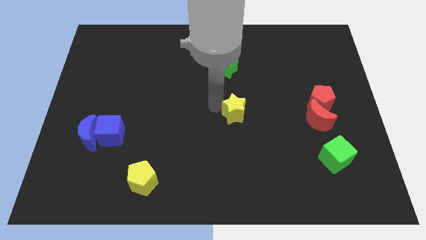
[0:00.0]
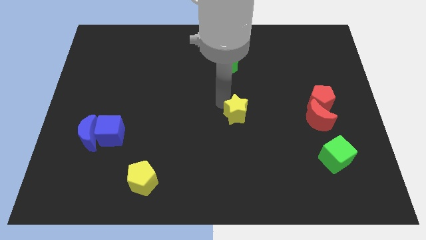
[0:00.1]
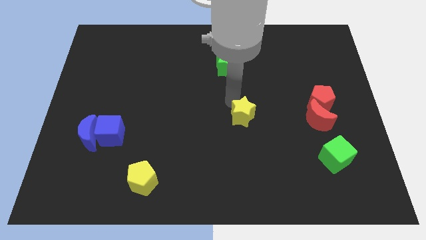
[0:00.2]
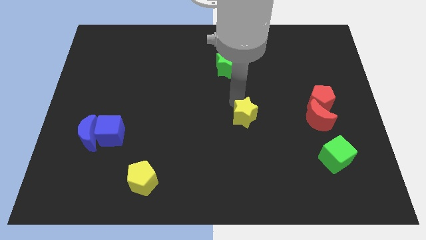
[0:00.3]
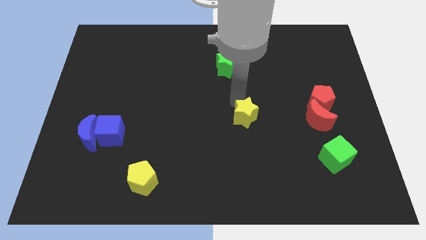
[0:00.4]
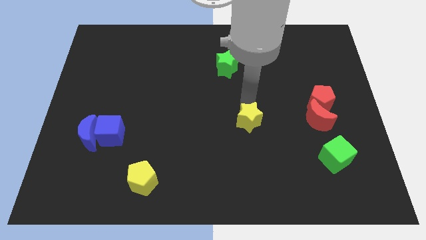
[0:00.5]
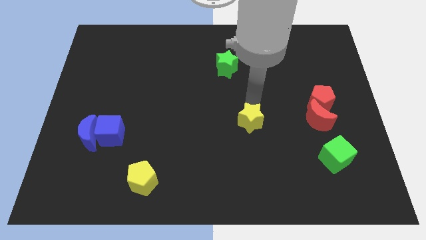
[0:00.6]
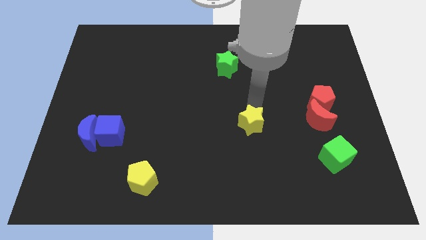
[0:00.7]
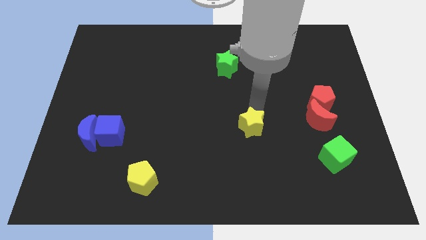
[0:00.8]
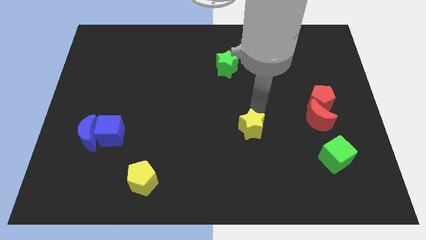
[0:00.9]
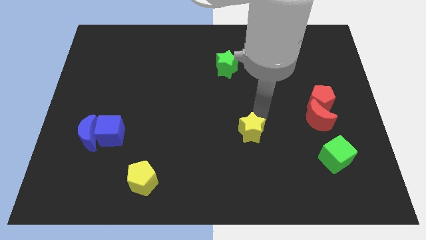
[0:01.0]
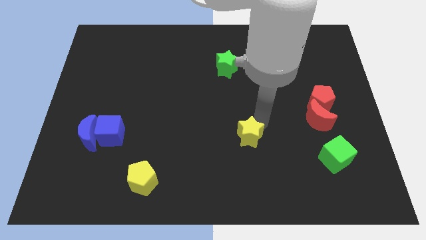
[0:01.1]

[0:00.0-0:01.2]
move the yellow star to the right of blue blocks

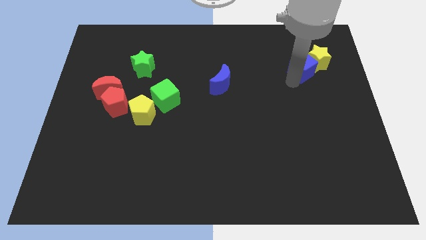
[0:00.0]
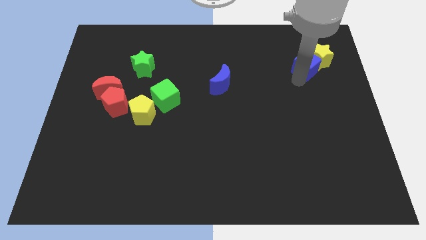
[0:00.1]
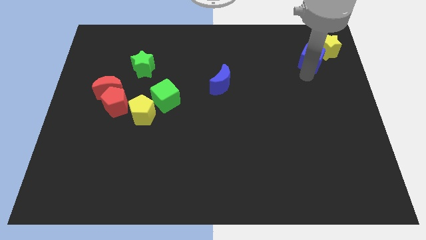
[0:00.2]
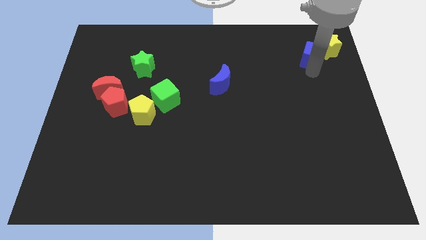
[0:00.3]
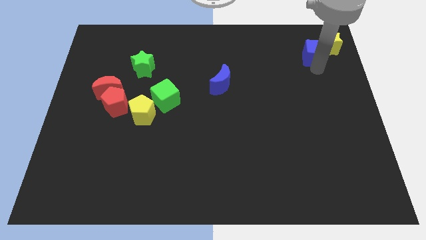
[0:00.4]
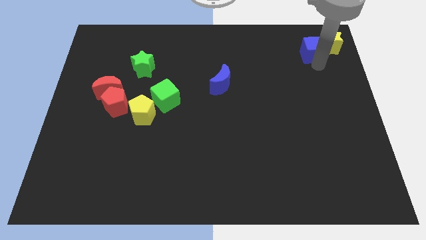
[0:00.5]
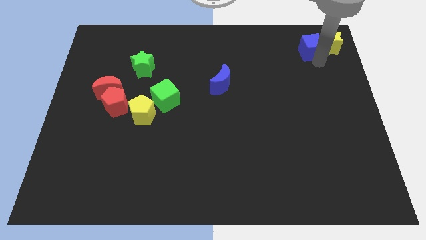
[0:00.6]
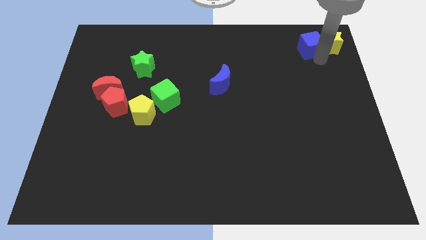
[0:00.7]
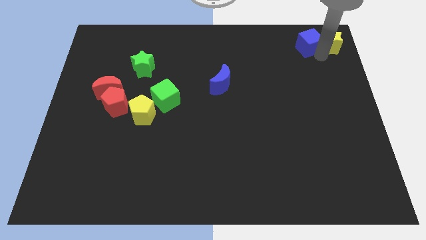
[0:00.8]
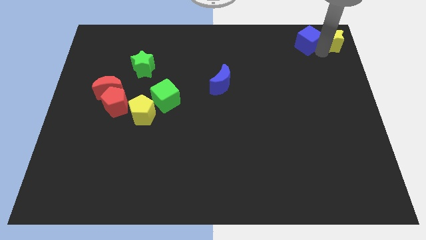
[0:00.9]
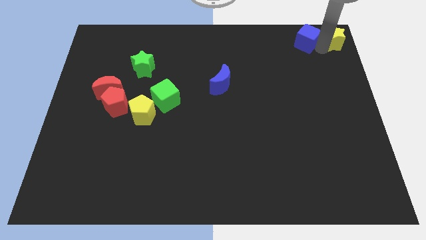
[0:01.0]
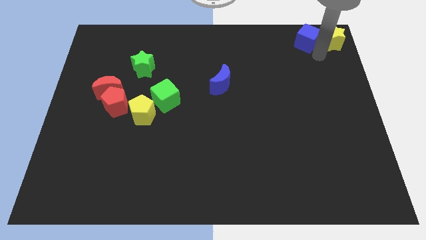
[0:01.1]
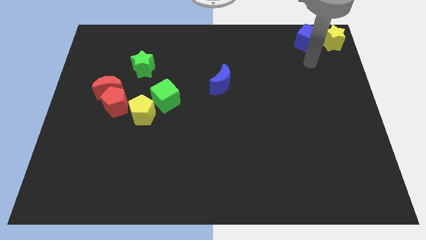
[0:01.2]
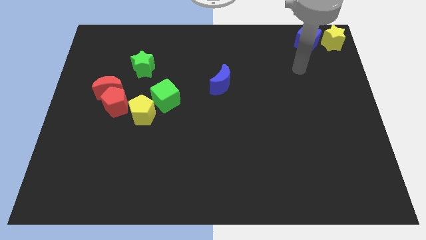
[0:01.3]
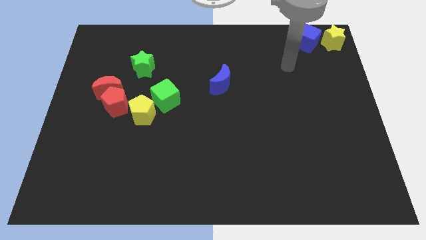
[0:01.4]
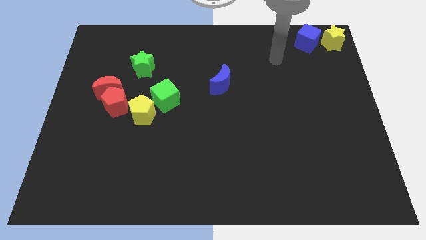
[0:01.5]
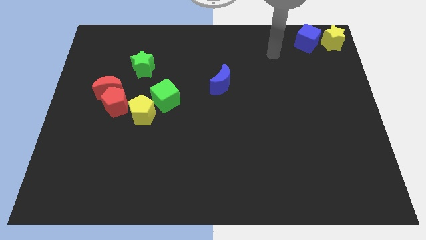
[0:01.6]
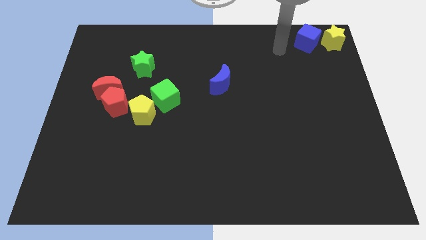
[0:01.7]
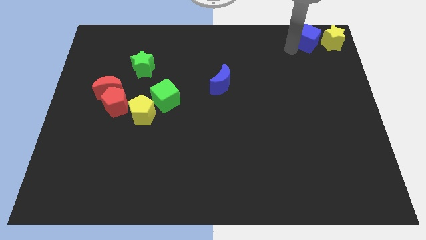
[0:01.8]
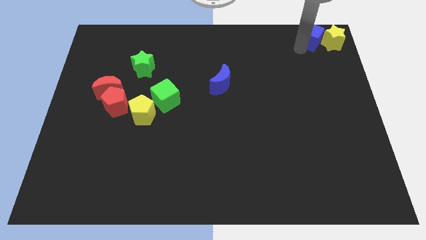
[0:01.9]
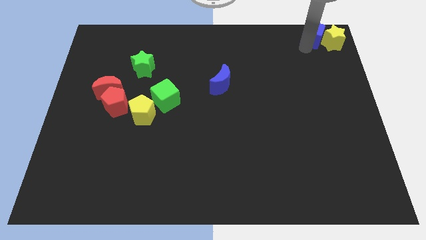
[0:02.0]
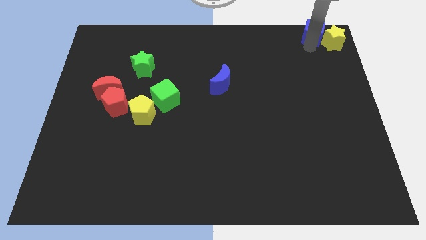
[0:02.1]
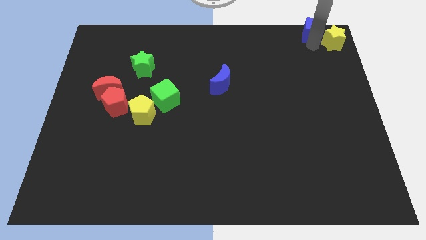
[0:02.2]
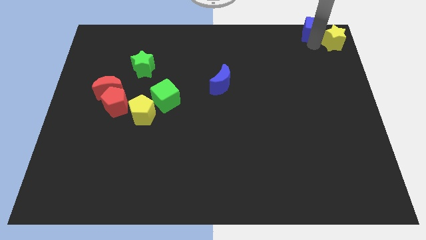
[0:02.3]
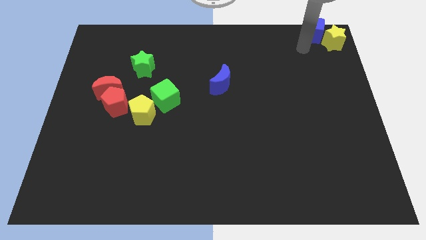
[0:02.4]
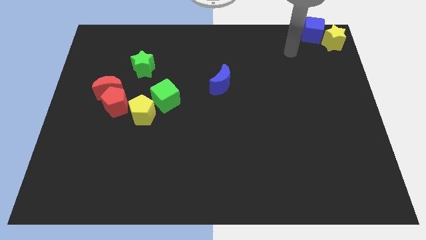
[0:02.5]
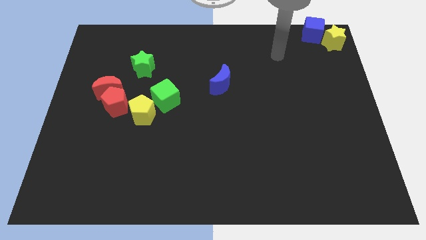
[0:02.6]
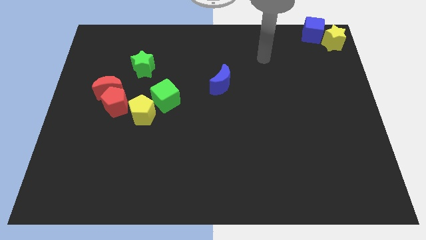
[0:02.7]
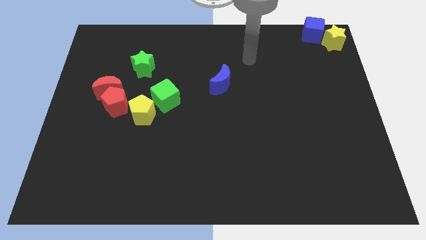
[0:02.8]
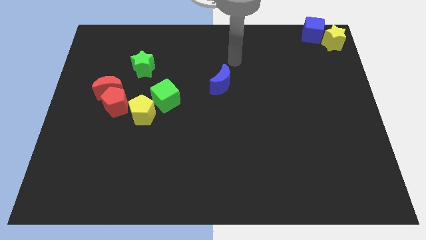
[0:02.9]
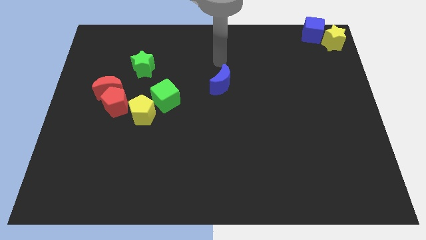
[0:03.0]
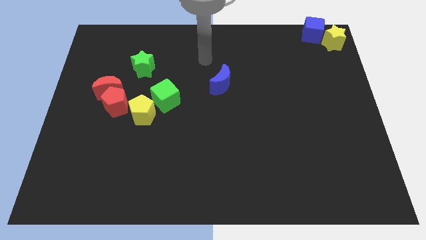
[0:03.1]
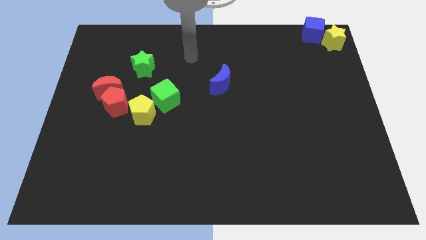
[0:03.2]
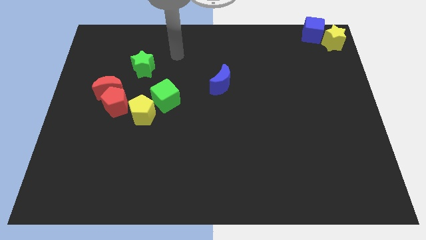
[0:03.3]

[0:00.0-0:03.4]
place your arm to the right side of the green star

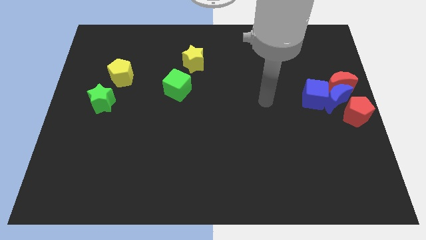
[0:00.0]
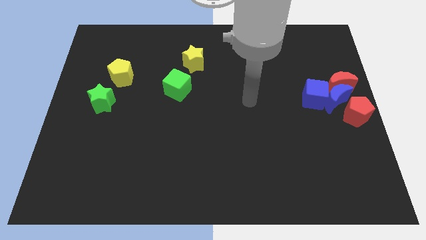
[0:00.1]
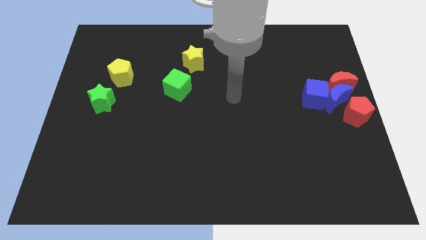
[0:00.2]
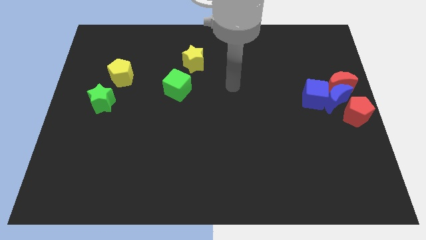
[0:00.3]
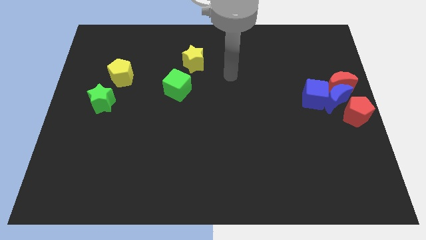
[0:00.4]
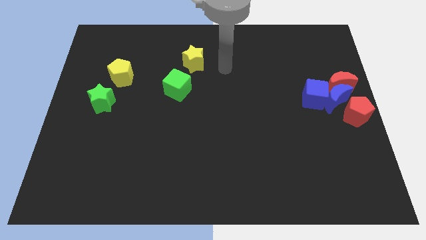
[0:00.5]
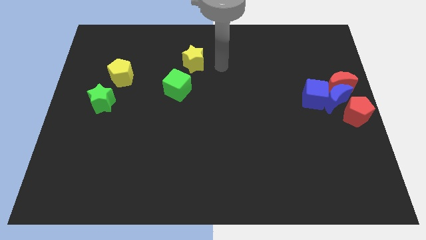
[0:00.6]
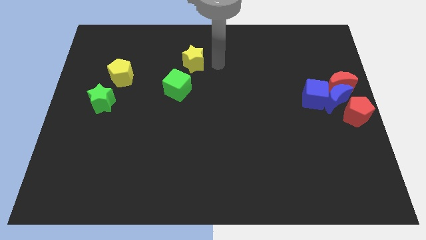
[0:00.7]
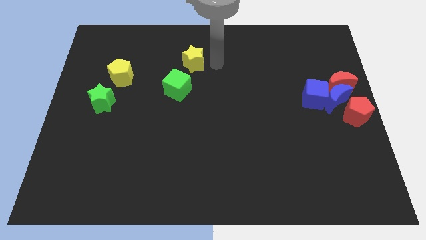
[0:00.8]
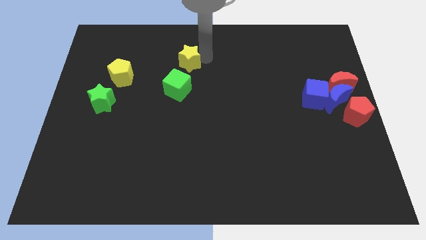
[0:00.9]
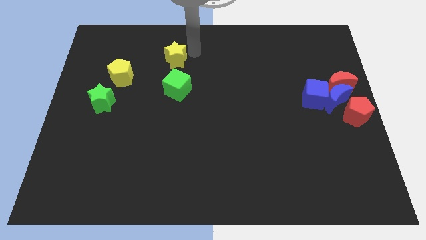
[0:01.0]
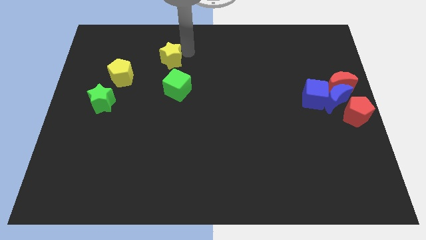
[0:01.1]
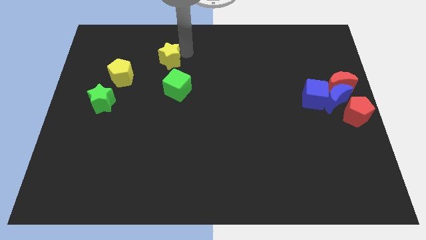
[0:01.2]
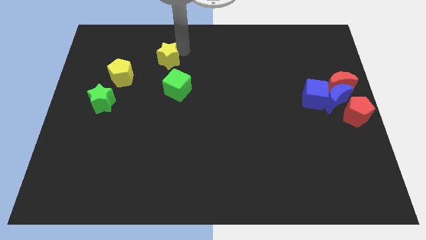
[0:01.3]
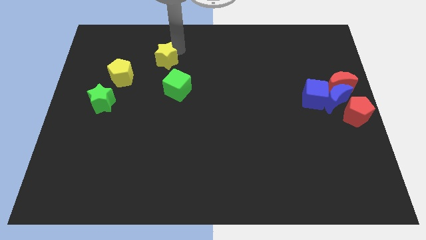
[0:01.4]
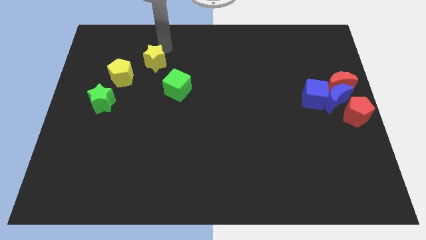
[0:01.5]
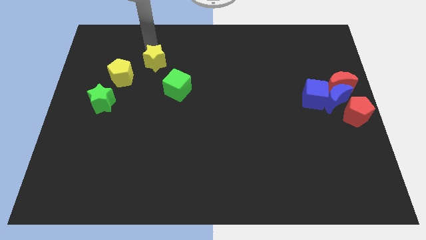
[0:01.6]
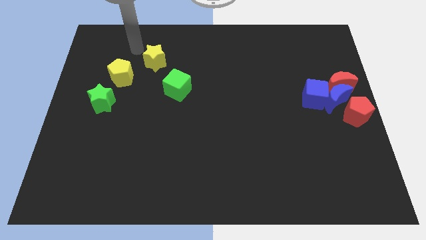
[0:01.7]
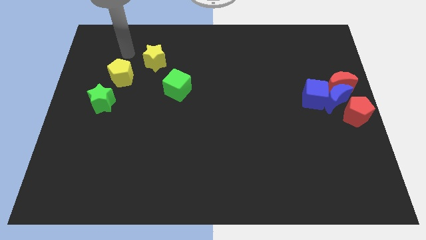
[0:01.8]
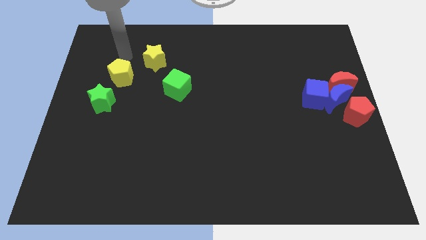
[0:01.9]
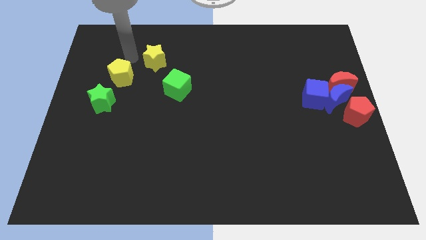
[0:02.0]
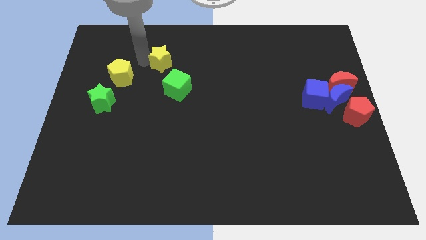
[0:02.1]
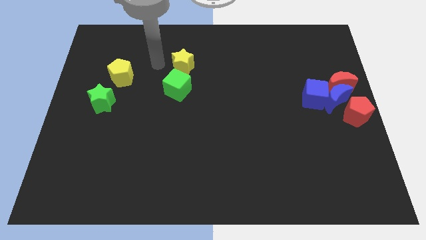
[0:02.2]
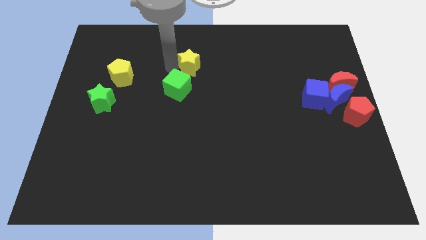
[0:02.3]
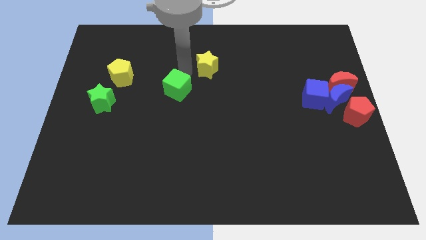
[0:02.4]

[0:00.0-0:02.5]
slightly slide the yellow star to the right side of the board

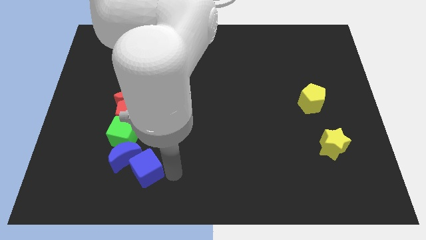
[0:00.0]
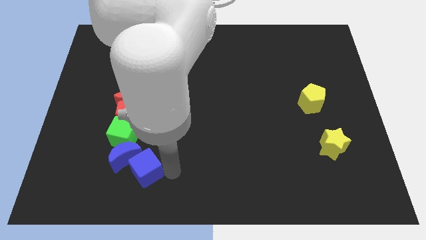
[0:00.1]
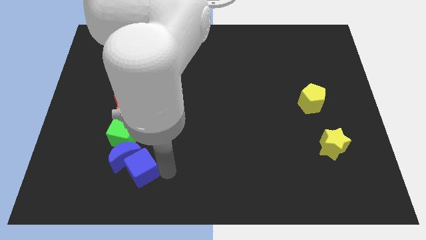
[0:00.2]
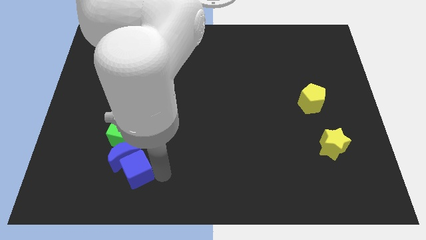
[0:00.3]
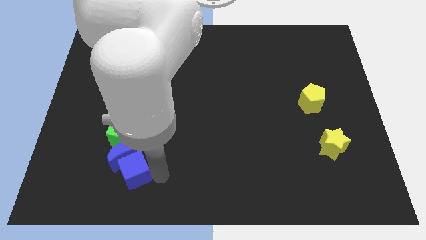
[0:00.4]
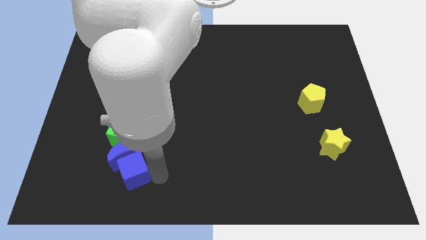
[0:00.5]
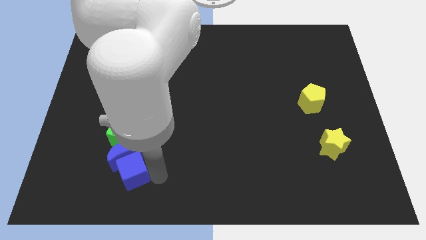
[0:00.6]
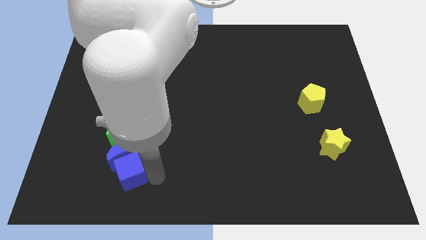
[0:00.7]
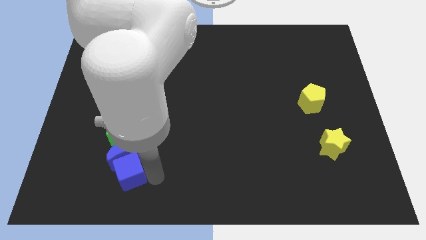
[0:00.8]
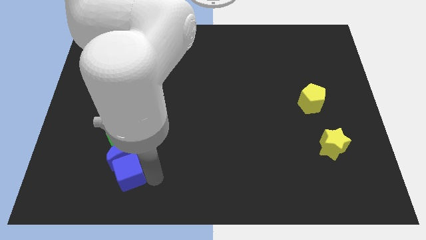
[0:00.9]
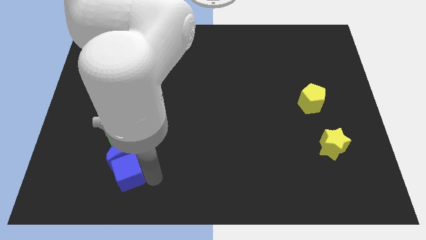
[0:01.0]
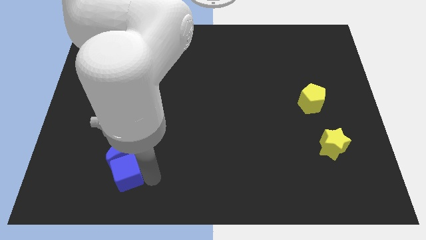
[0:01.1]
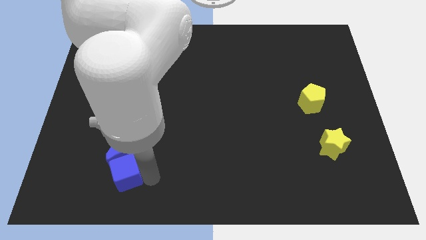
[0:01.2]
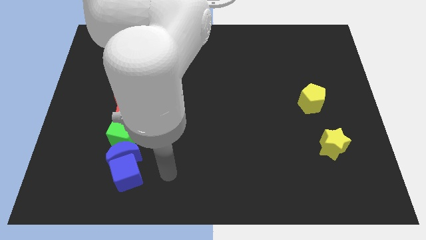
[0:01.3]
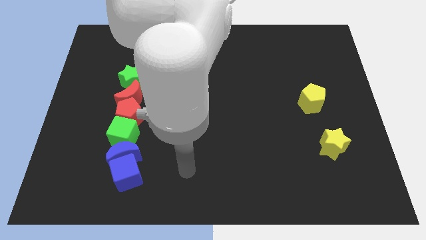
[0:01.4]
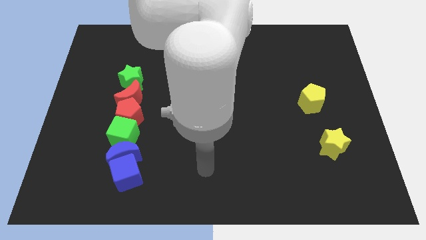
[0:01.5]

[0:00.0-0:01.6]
push the blue cube close to the blue crescent

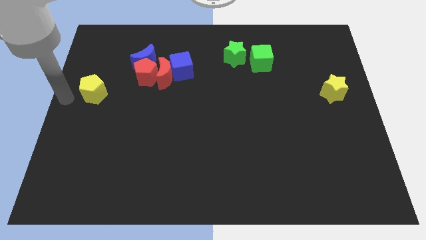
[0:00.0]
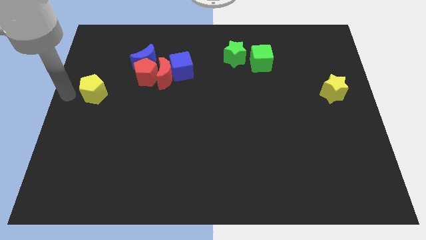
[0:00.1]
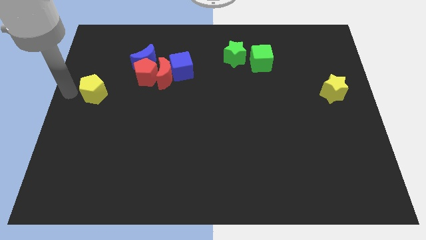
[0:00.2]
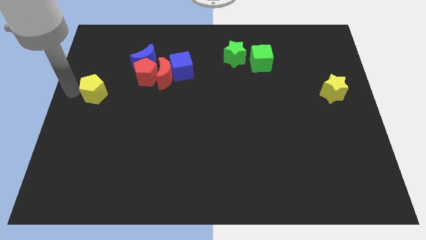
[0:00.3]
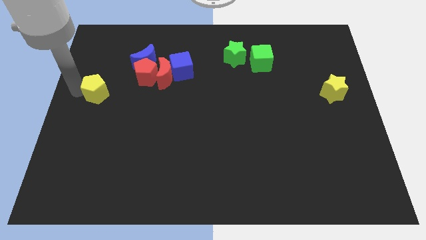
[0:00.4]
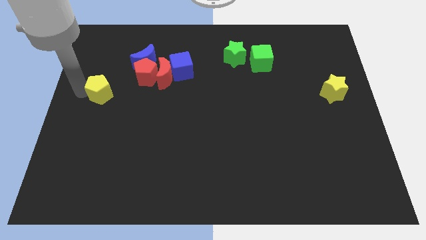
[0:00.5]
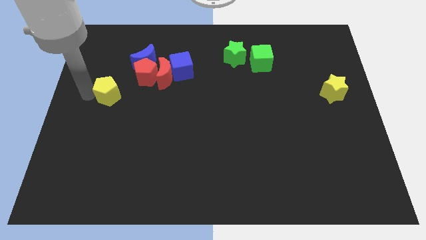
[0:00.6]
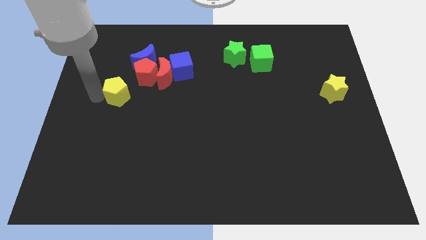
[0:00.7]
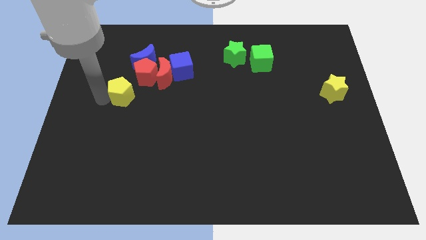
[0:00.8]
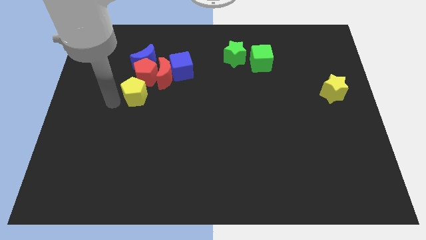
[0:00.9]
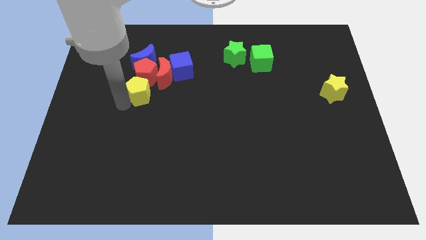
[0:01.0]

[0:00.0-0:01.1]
push yellow pentagon just below the red pentagon
